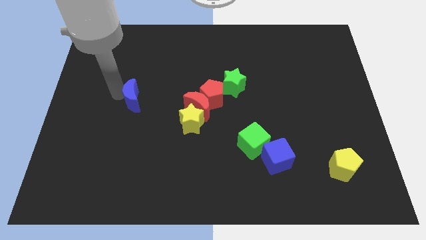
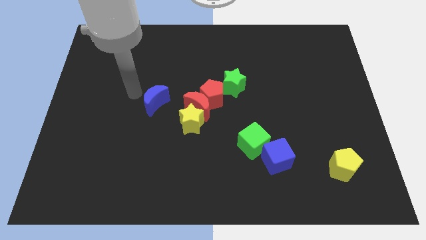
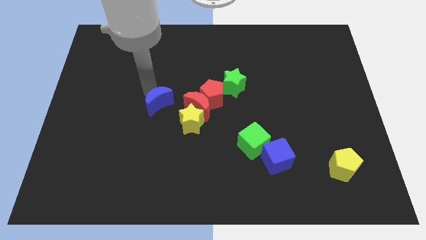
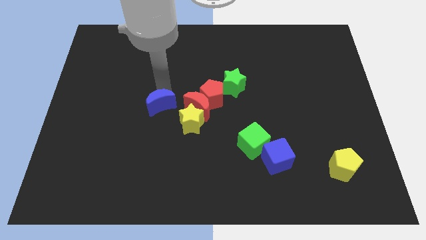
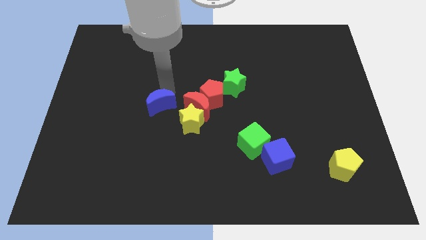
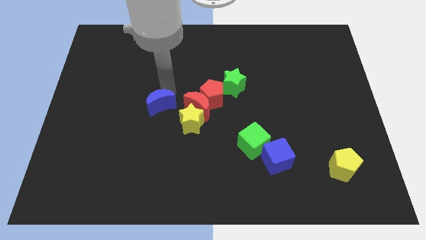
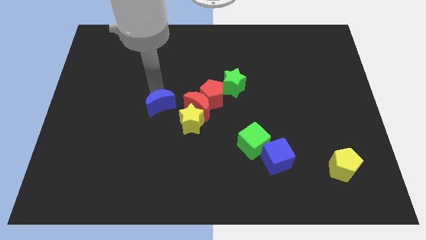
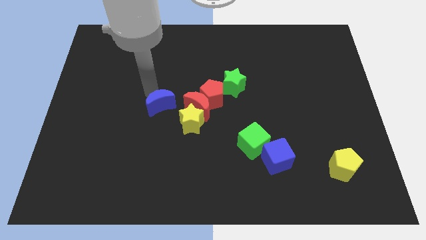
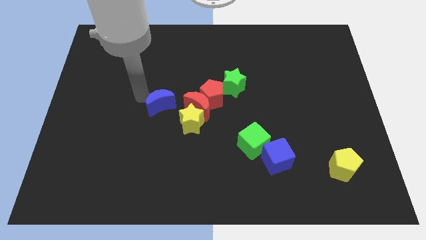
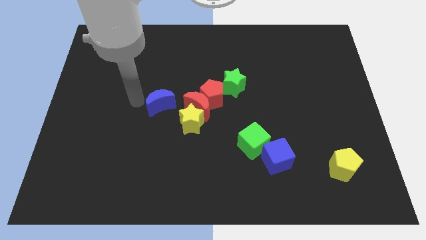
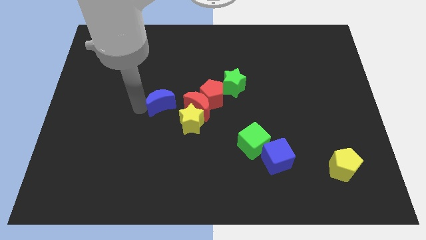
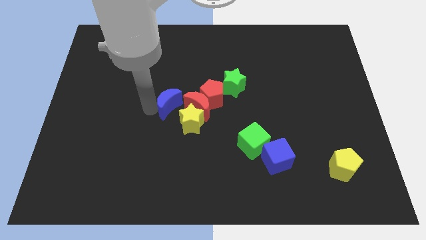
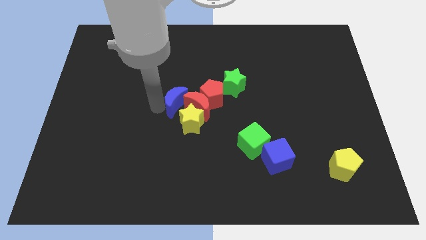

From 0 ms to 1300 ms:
move the blue moon into the red moon

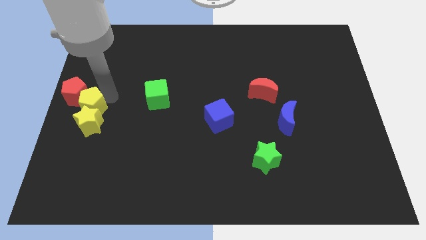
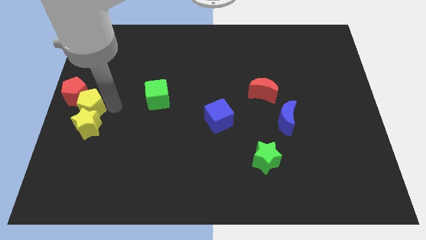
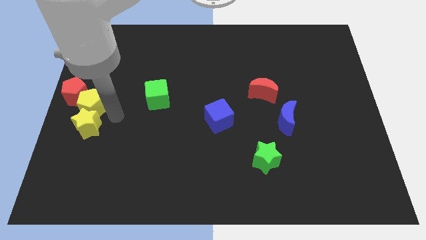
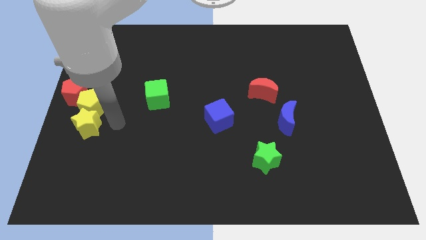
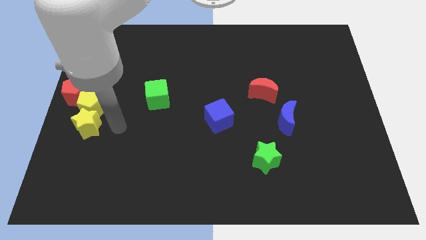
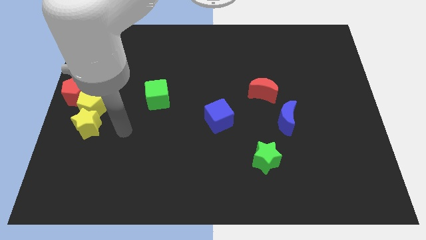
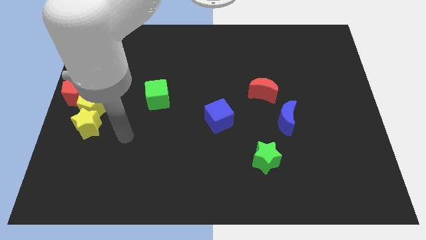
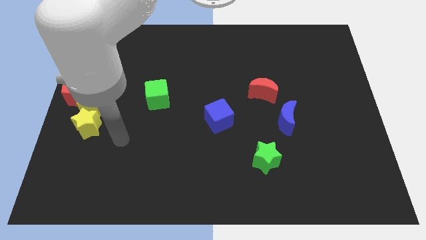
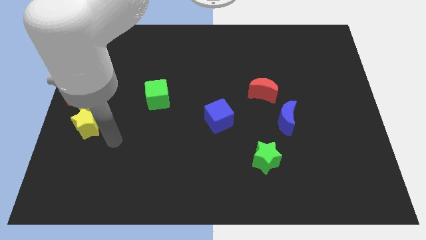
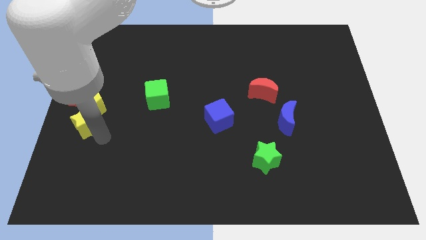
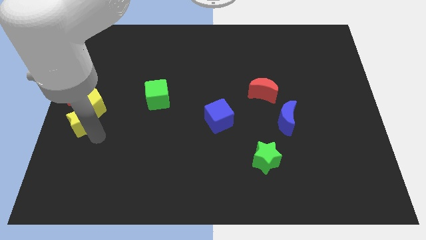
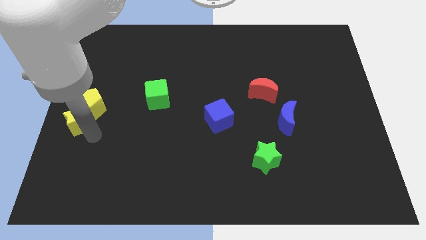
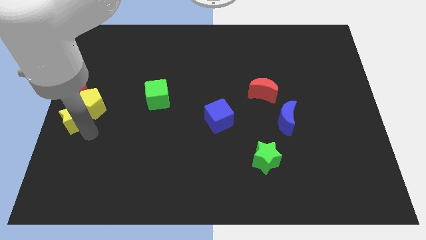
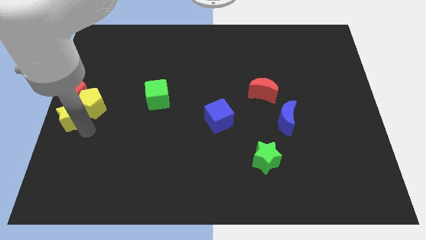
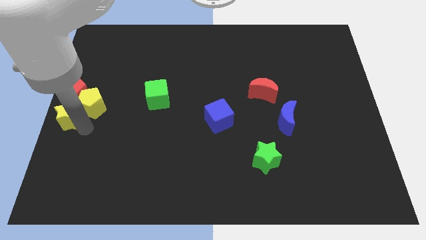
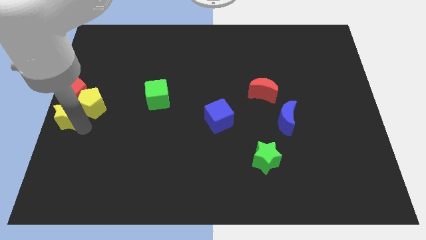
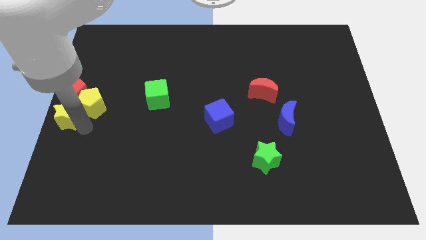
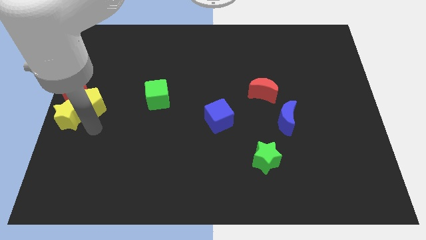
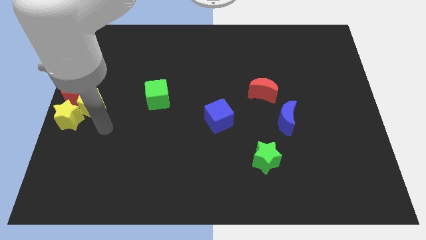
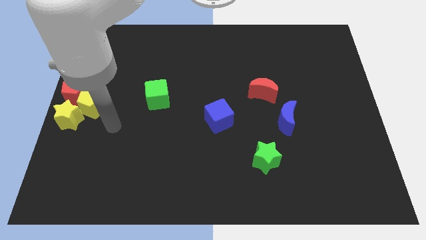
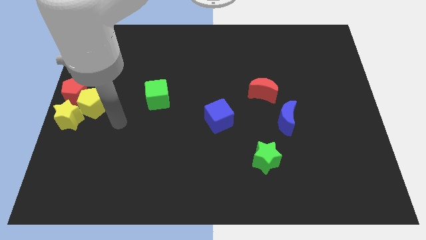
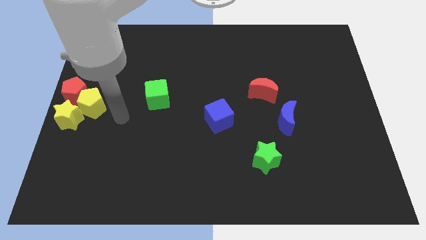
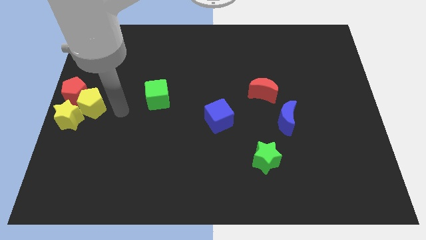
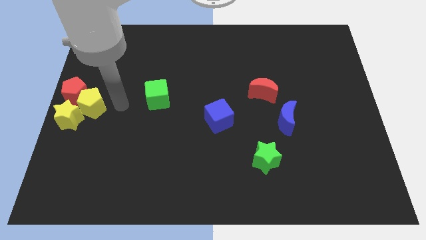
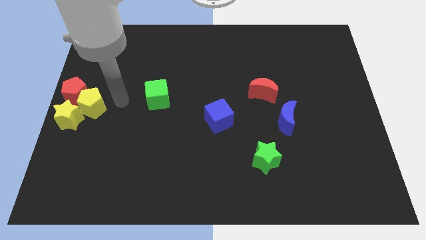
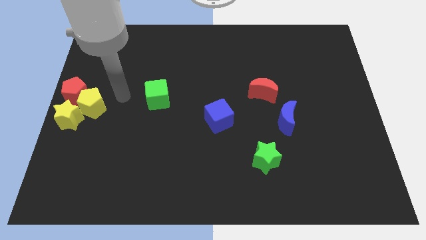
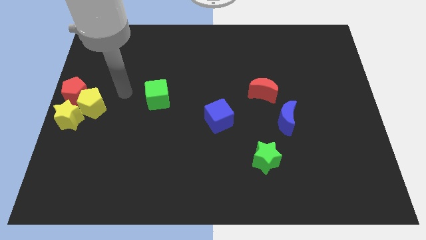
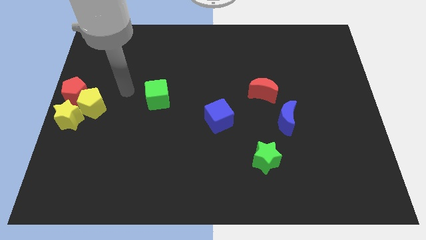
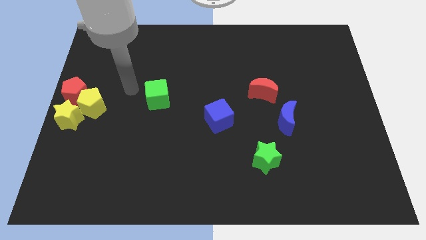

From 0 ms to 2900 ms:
place the yellow star to the left center of the board

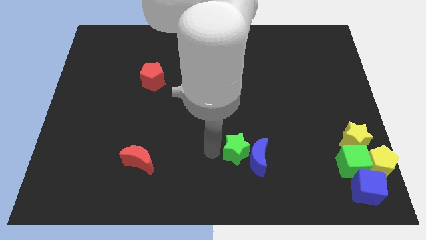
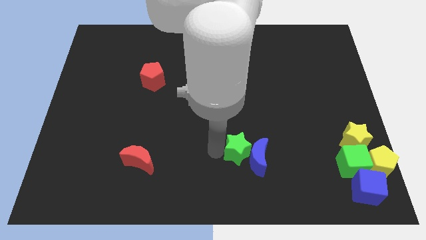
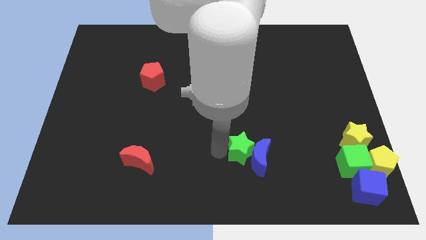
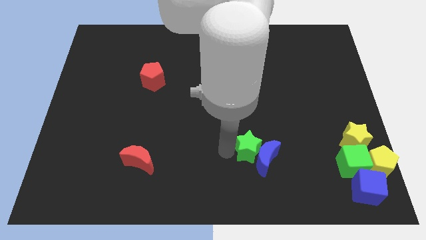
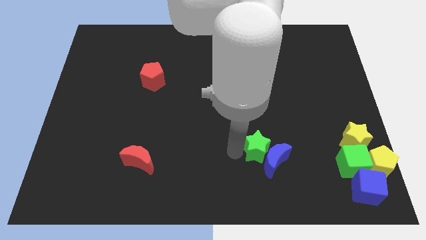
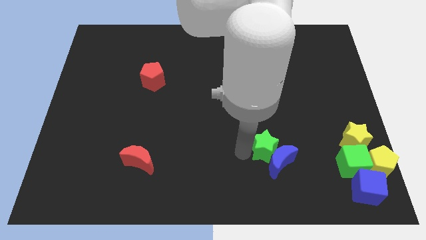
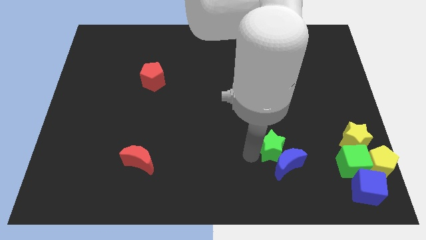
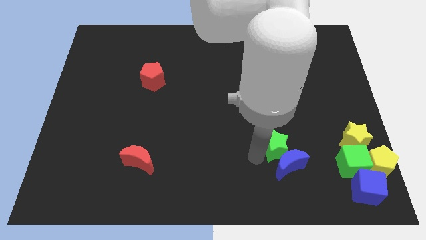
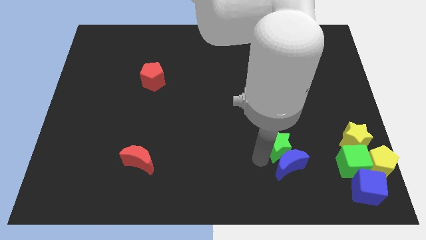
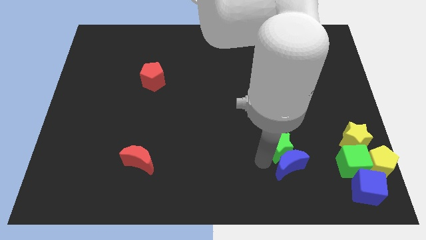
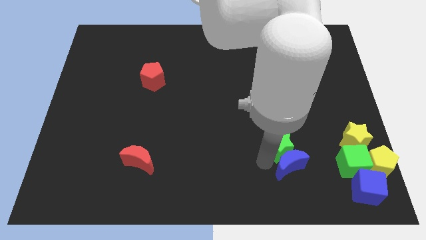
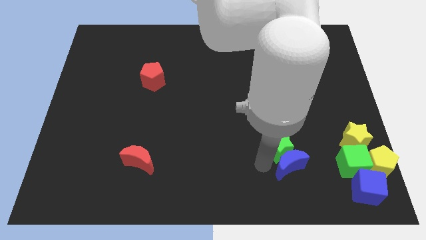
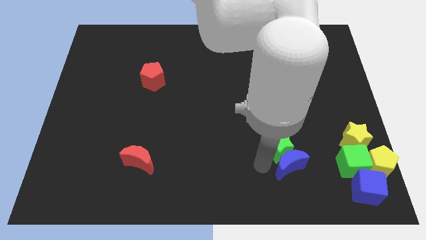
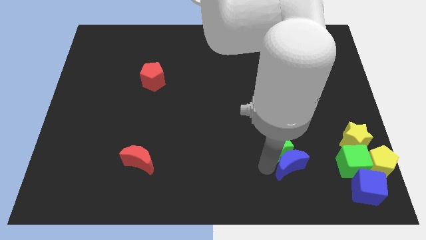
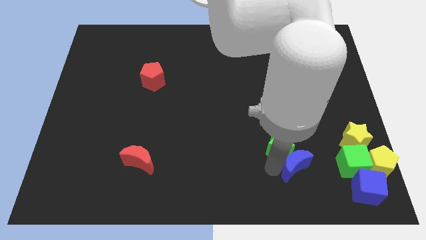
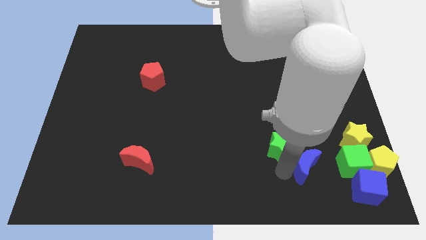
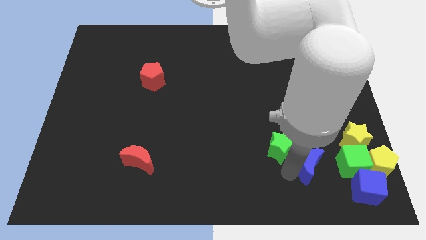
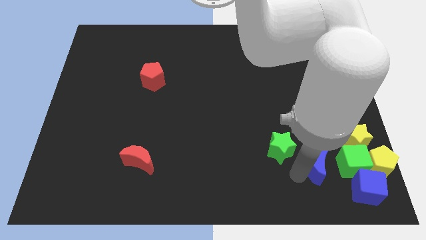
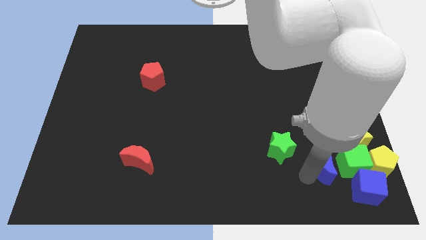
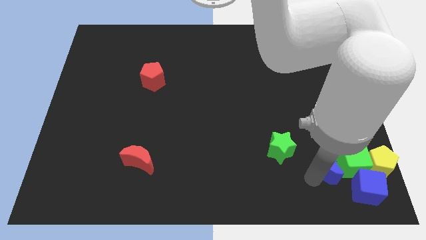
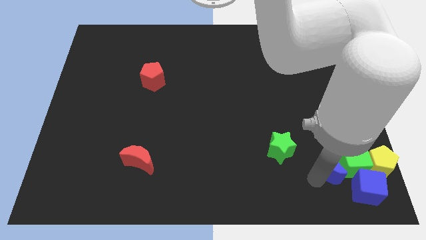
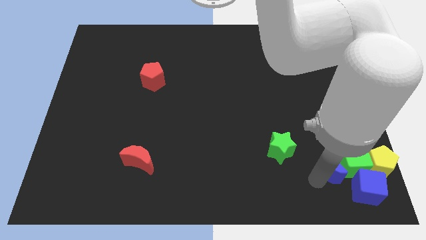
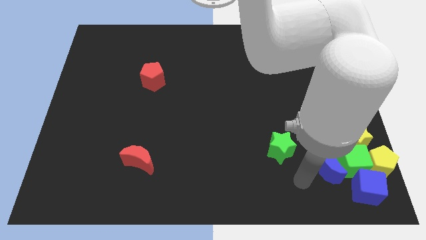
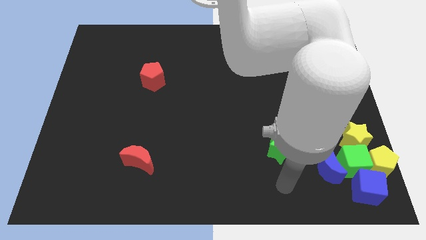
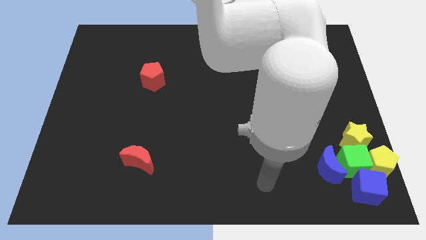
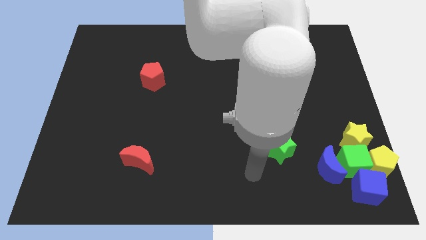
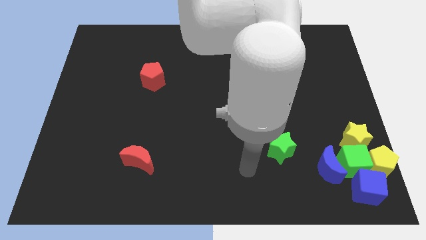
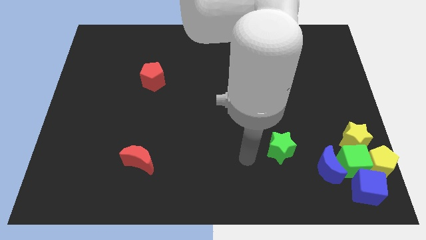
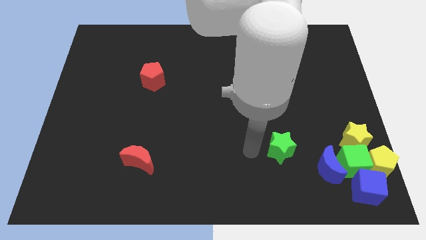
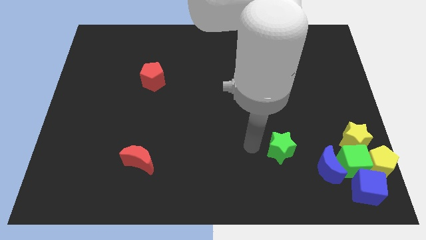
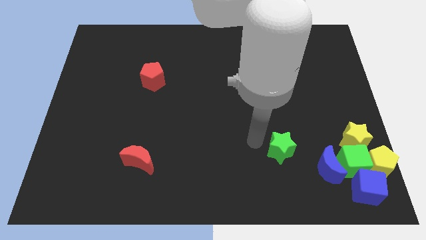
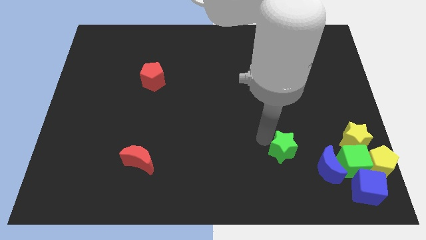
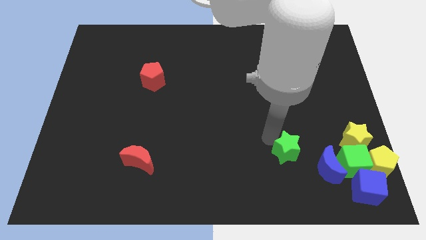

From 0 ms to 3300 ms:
separate the green star and blue moon

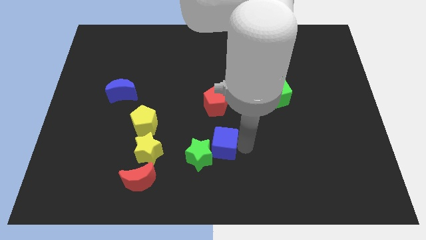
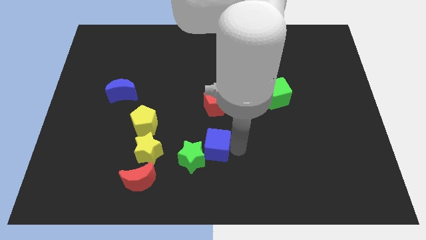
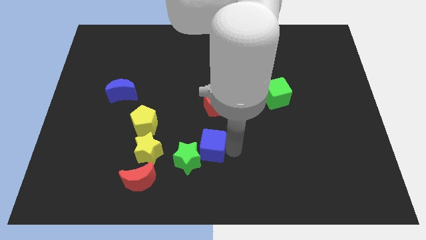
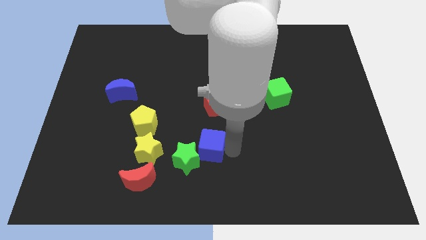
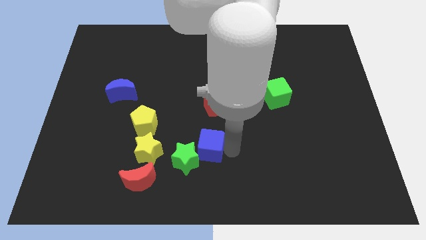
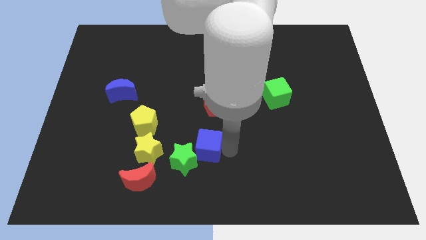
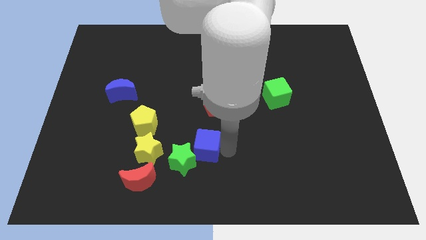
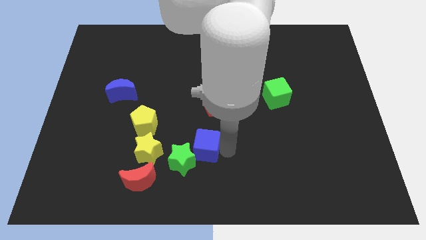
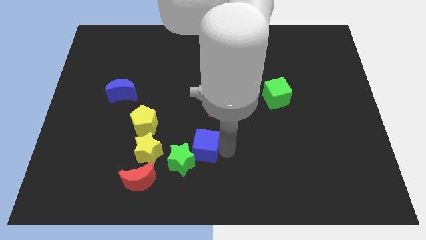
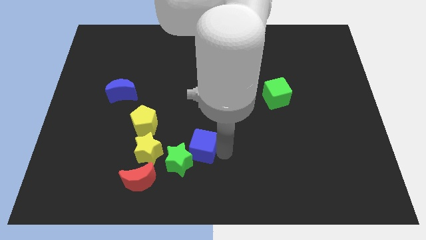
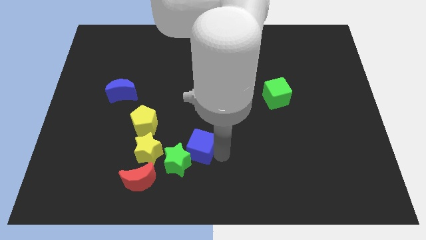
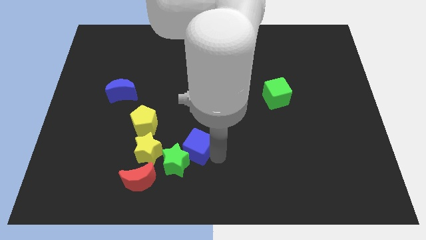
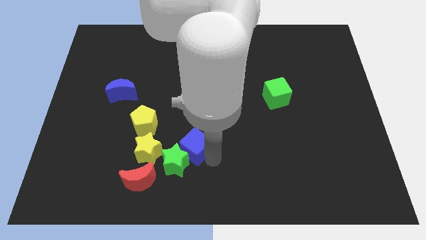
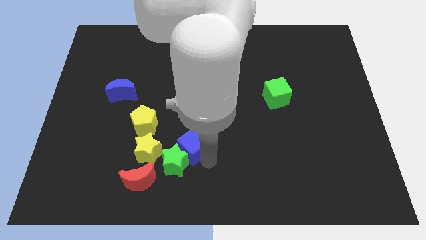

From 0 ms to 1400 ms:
move green star and blue cube diagonally above red moon

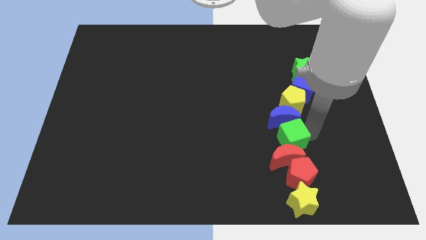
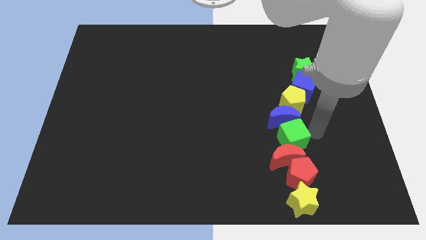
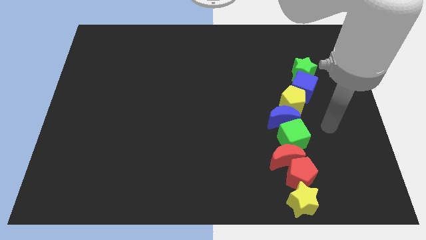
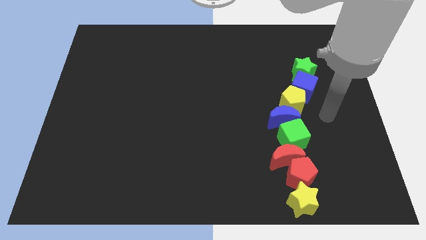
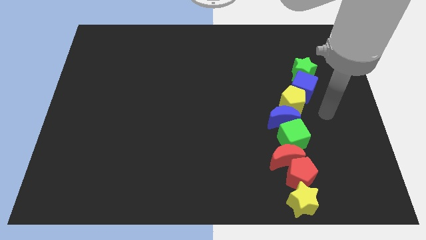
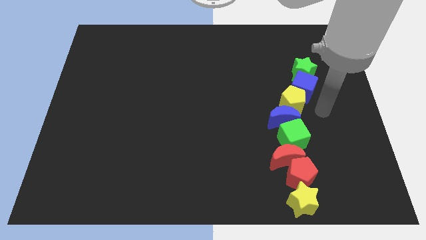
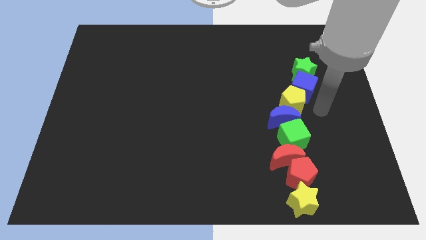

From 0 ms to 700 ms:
move the arm away from the green cube
